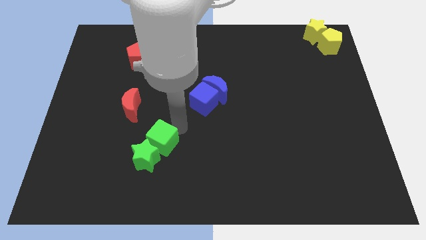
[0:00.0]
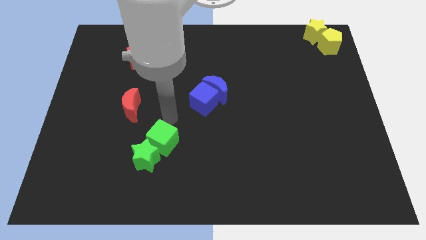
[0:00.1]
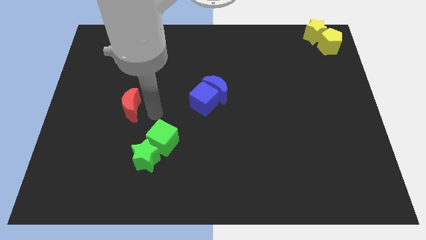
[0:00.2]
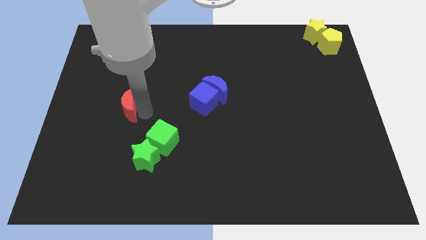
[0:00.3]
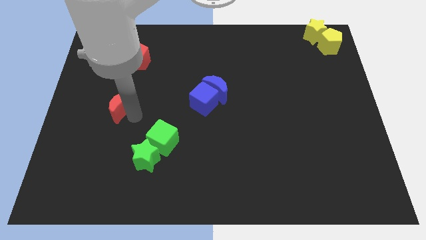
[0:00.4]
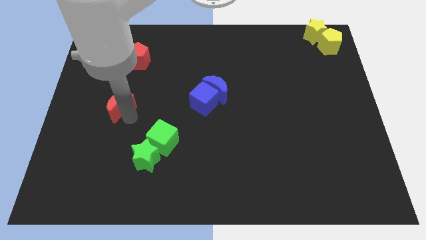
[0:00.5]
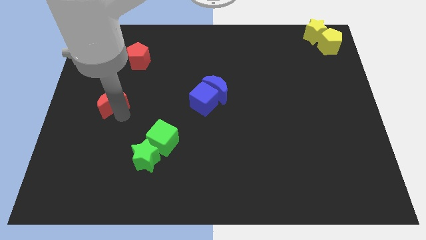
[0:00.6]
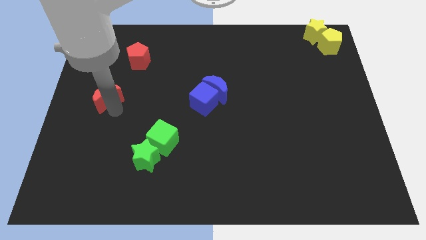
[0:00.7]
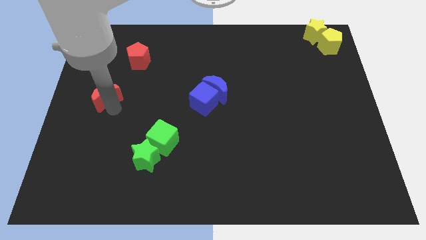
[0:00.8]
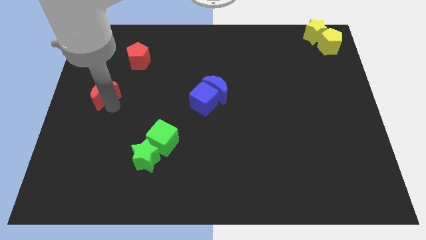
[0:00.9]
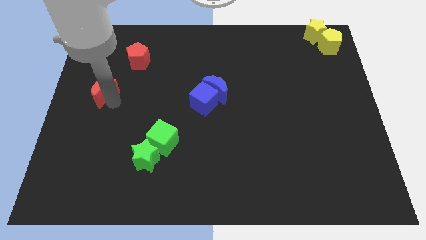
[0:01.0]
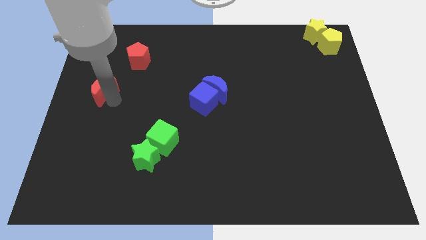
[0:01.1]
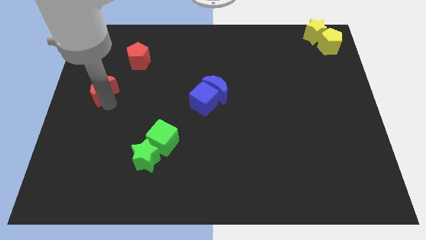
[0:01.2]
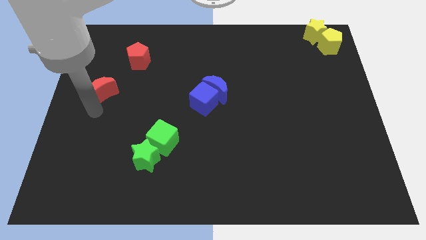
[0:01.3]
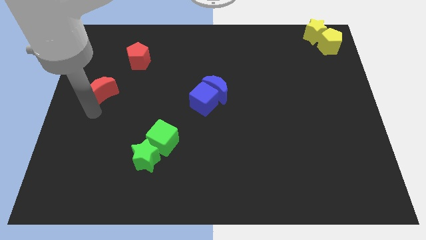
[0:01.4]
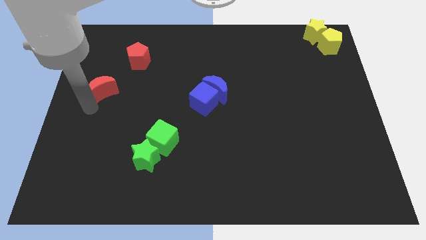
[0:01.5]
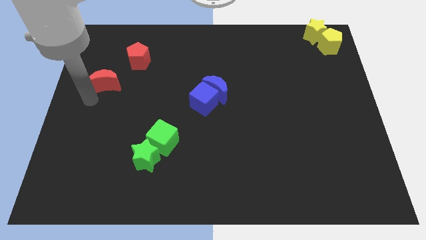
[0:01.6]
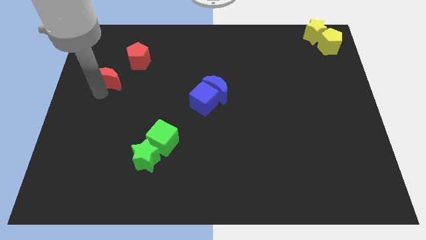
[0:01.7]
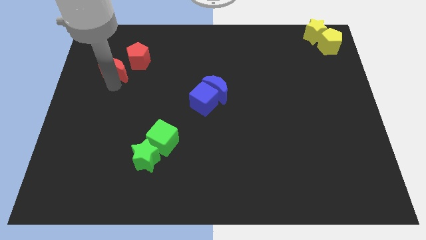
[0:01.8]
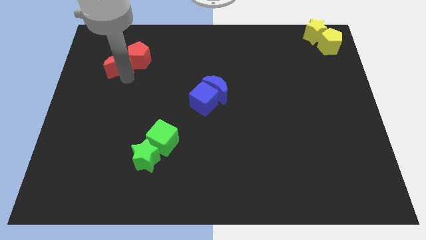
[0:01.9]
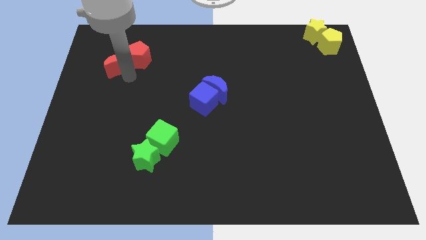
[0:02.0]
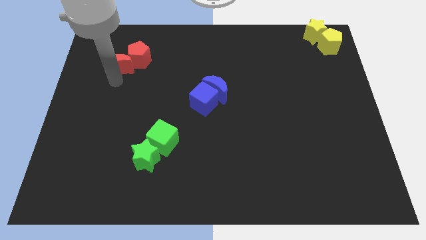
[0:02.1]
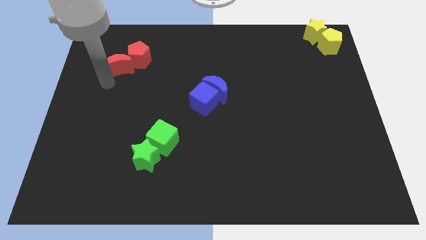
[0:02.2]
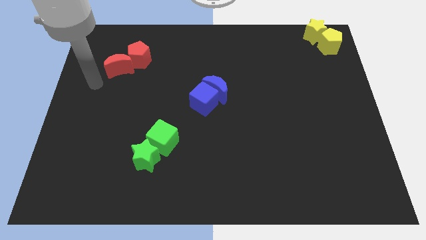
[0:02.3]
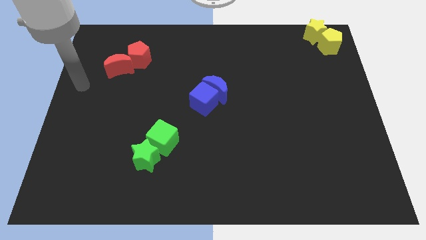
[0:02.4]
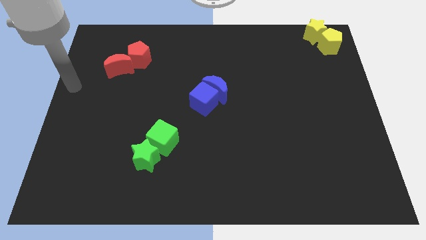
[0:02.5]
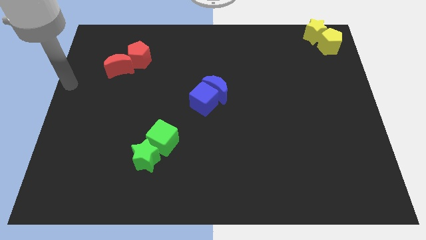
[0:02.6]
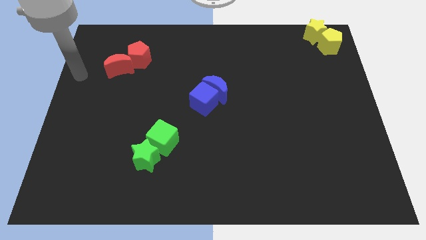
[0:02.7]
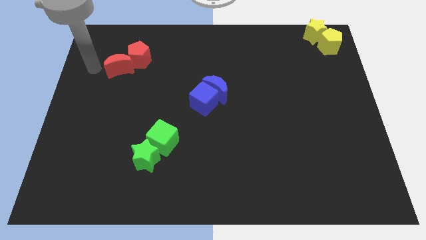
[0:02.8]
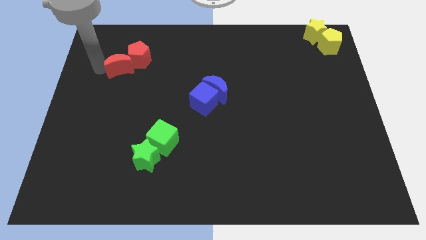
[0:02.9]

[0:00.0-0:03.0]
push the red moon into the red pentagon

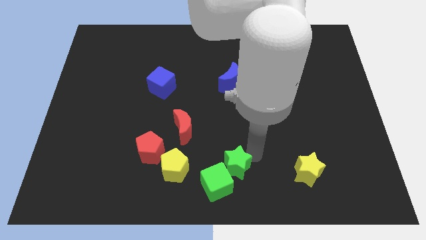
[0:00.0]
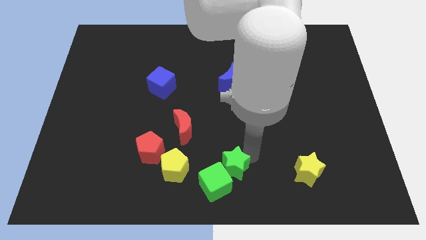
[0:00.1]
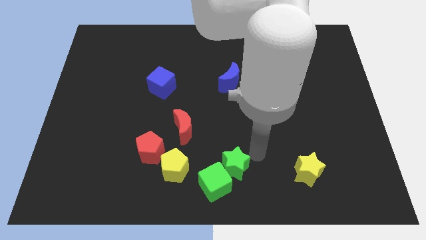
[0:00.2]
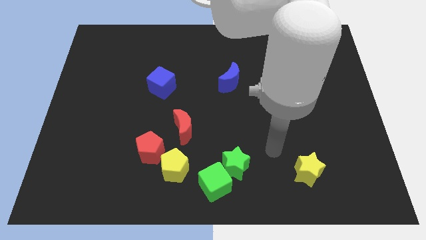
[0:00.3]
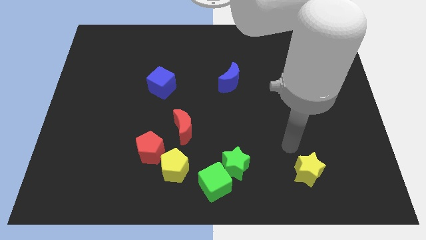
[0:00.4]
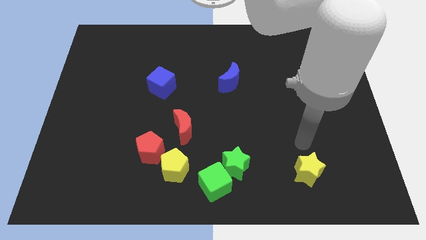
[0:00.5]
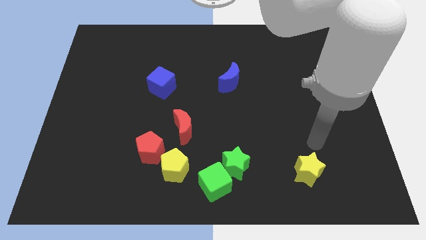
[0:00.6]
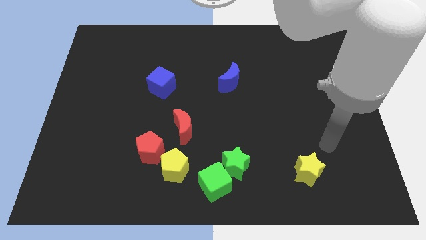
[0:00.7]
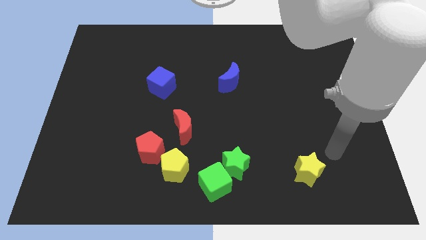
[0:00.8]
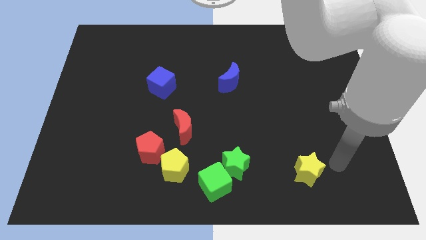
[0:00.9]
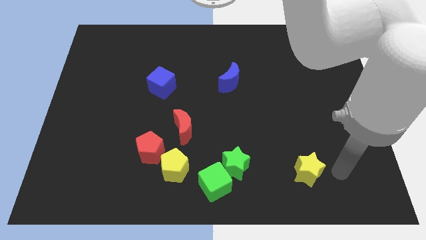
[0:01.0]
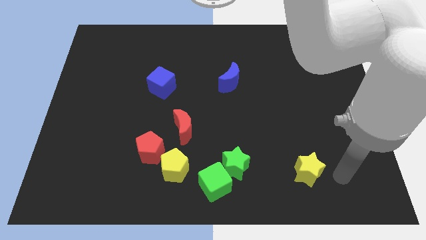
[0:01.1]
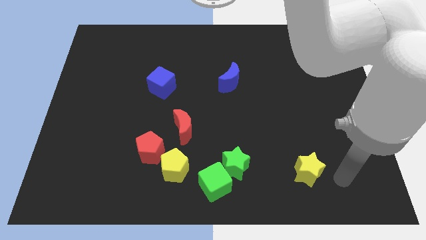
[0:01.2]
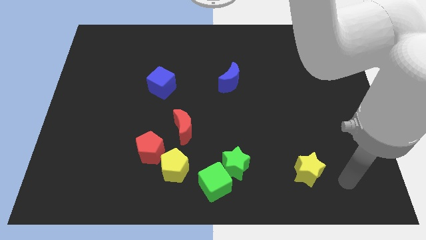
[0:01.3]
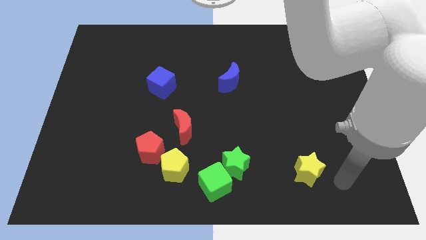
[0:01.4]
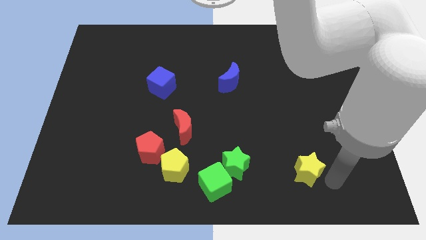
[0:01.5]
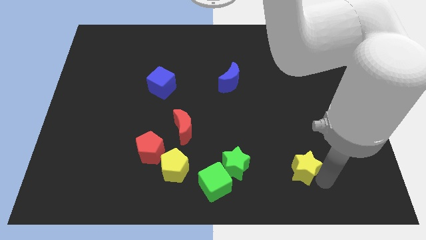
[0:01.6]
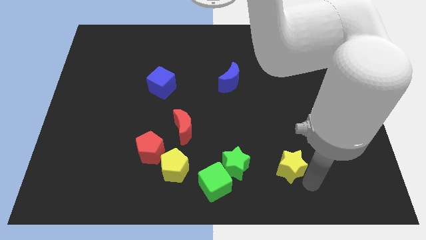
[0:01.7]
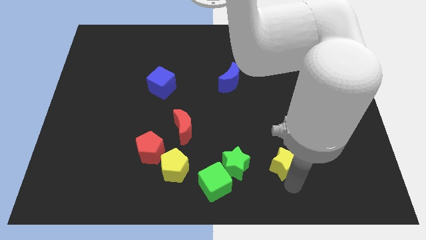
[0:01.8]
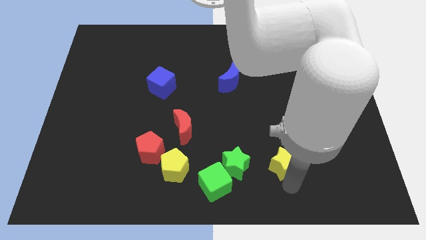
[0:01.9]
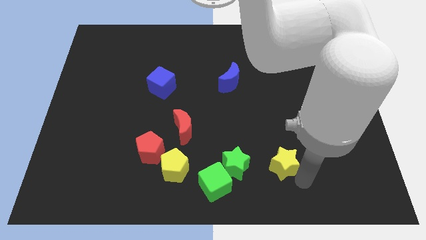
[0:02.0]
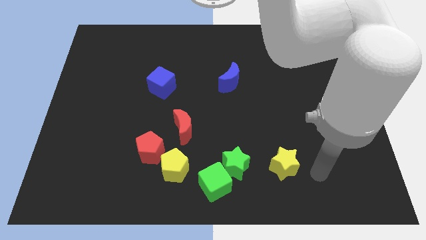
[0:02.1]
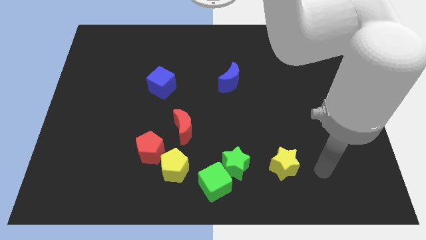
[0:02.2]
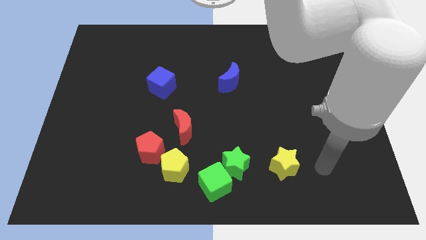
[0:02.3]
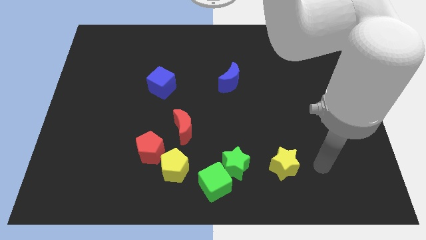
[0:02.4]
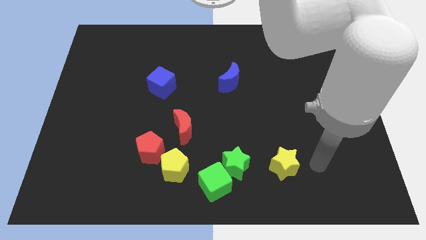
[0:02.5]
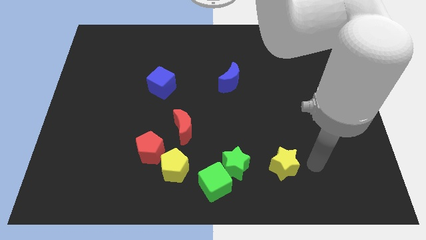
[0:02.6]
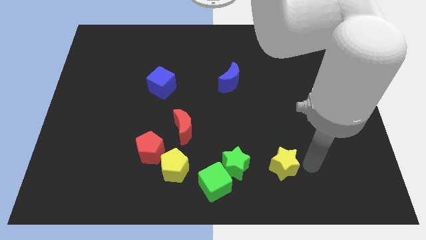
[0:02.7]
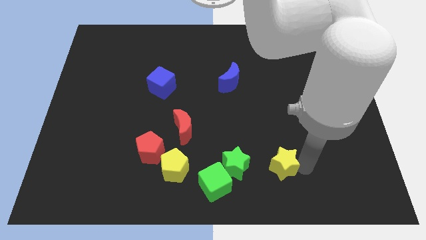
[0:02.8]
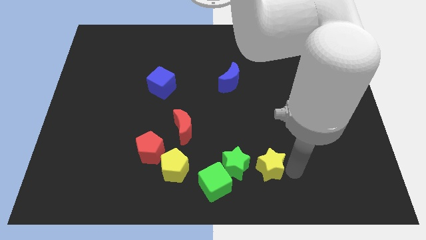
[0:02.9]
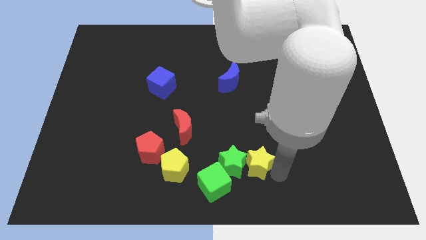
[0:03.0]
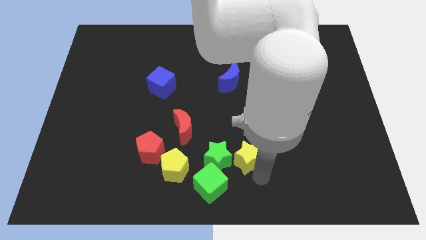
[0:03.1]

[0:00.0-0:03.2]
push yellow star into green star

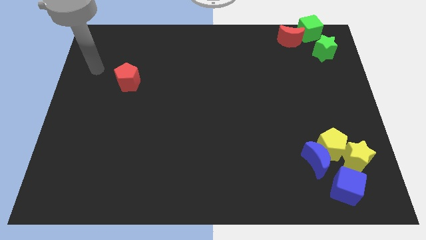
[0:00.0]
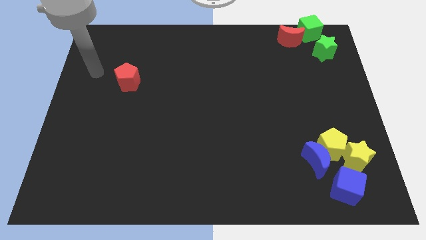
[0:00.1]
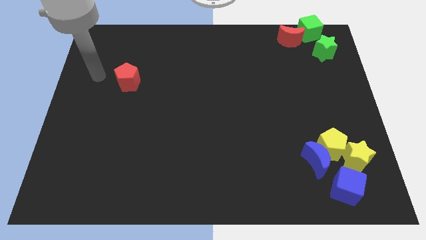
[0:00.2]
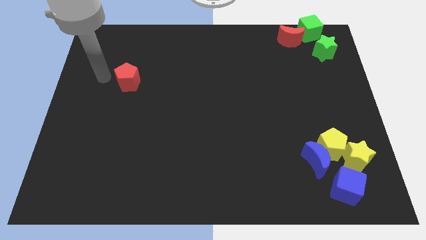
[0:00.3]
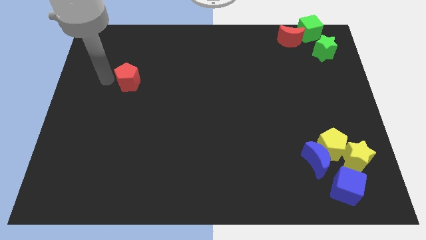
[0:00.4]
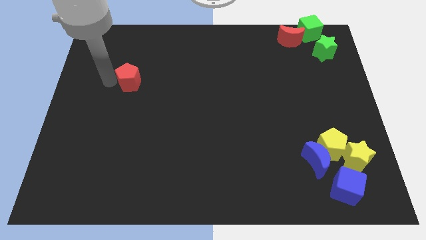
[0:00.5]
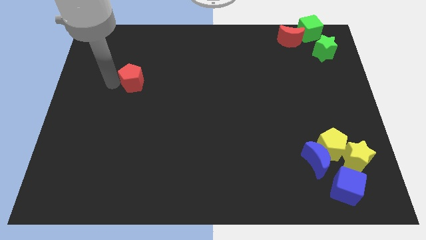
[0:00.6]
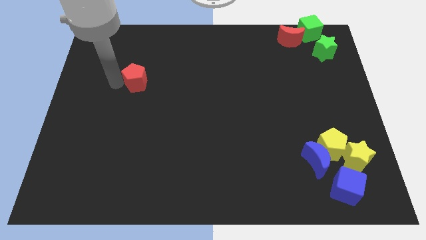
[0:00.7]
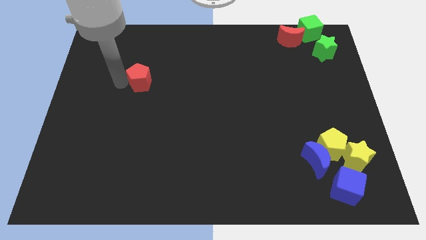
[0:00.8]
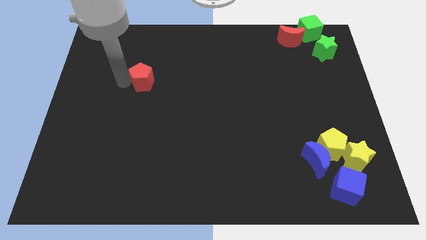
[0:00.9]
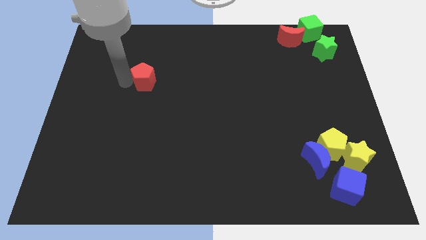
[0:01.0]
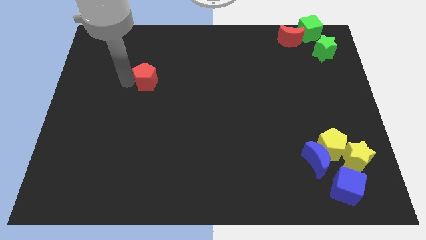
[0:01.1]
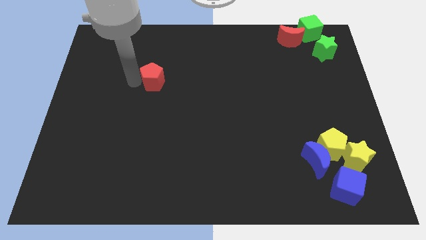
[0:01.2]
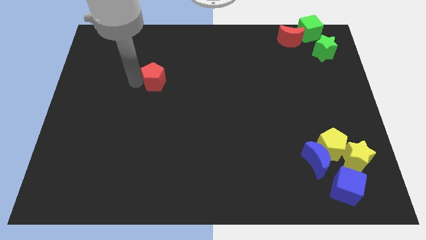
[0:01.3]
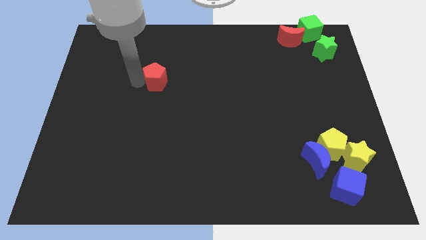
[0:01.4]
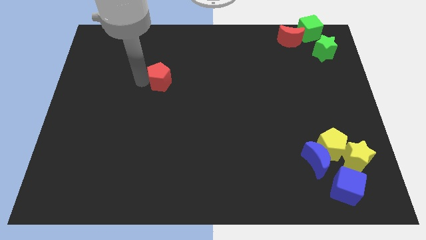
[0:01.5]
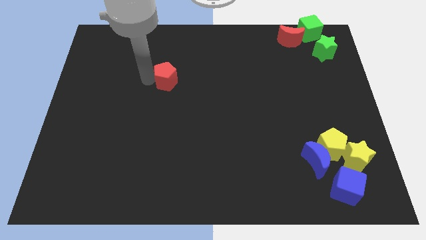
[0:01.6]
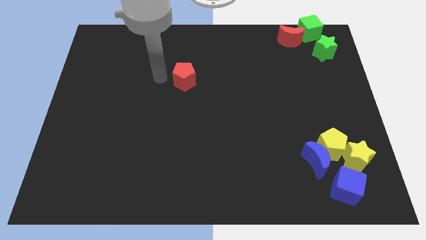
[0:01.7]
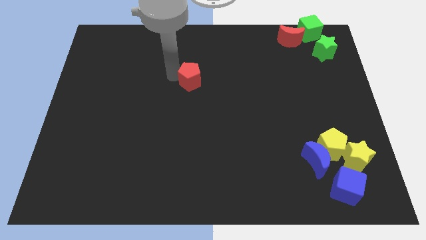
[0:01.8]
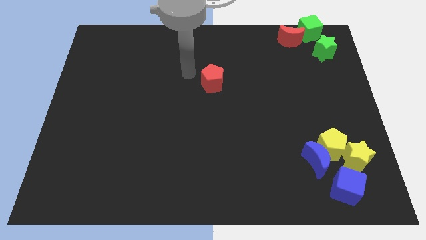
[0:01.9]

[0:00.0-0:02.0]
slide the red pentagon slightly to the right

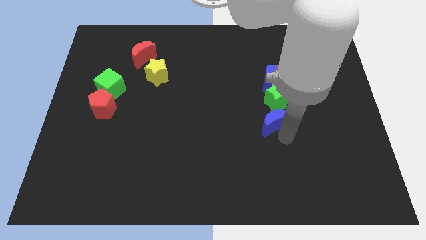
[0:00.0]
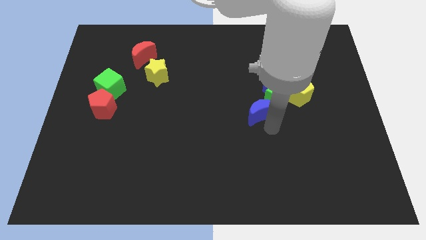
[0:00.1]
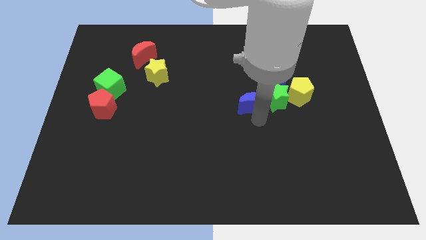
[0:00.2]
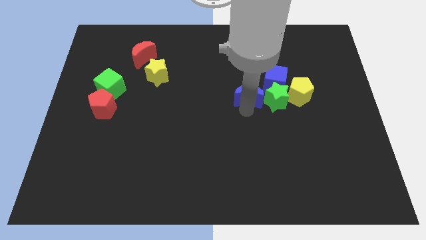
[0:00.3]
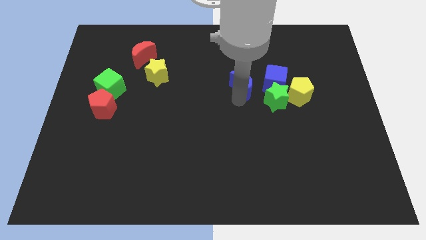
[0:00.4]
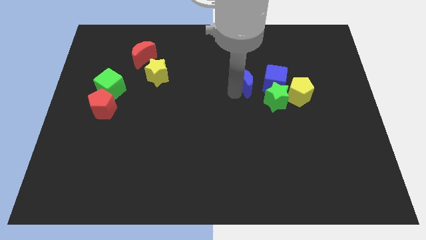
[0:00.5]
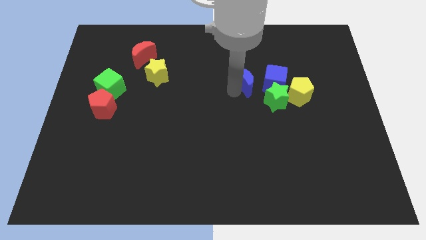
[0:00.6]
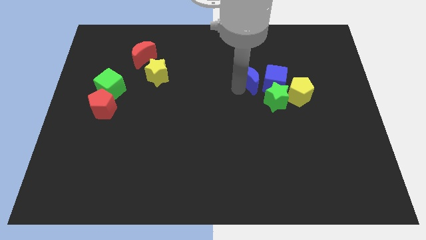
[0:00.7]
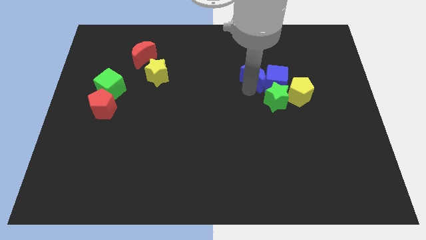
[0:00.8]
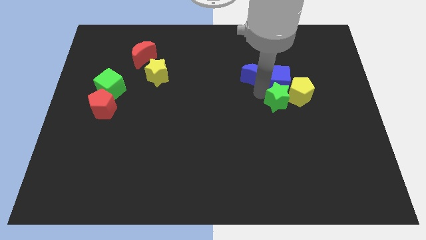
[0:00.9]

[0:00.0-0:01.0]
push the blue crescent into the blue cube
